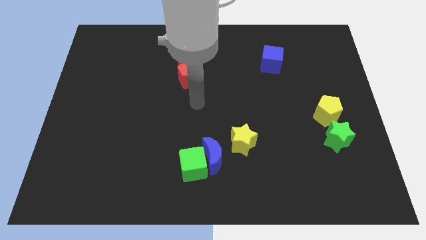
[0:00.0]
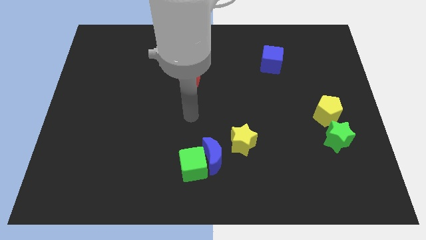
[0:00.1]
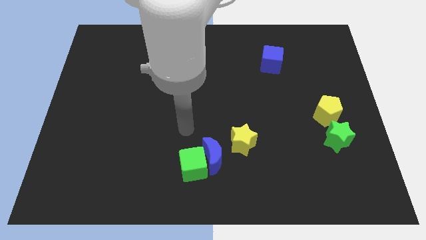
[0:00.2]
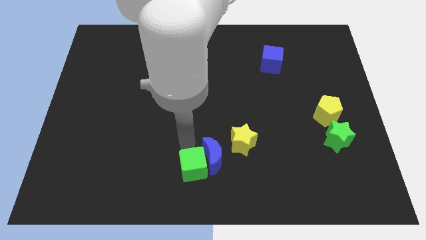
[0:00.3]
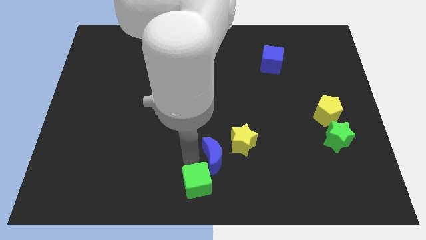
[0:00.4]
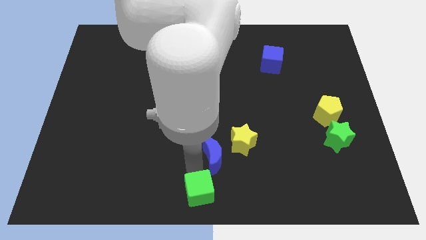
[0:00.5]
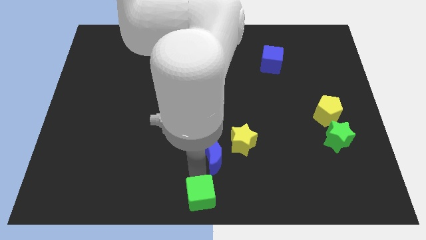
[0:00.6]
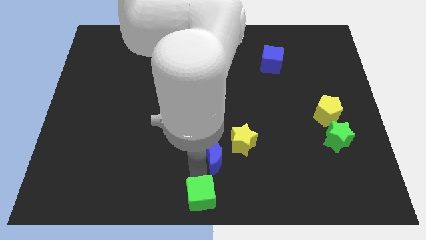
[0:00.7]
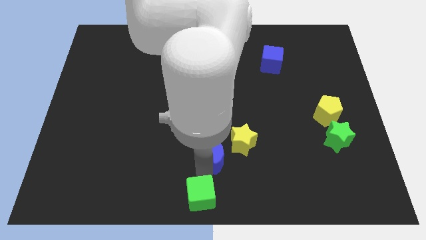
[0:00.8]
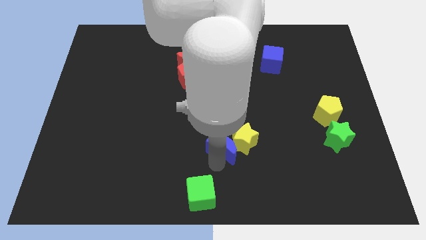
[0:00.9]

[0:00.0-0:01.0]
push the green cube downward

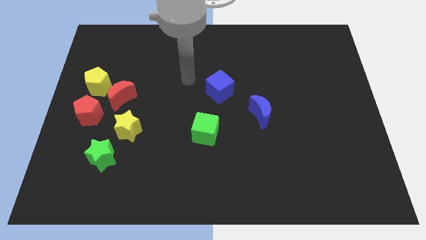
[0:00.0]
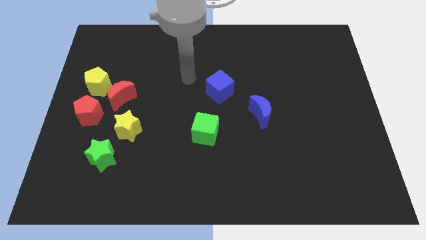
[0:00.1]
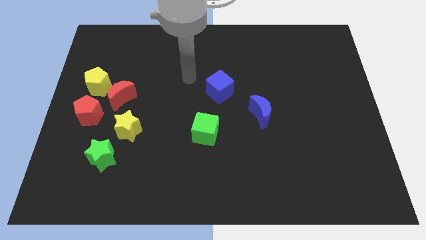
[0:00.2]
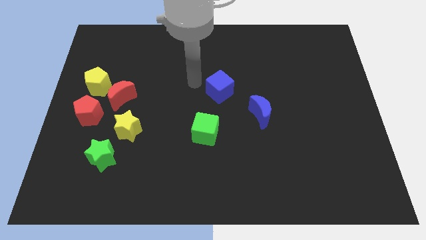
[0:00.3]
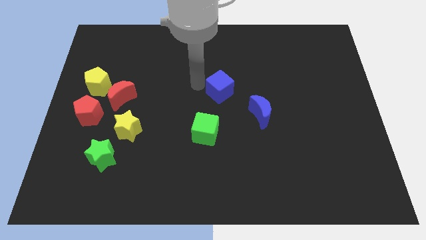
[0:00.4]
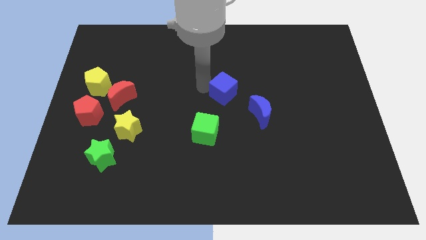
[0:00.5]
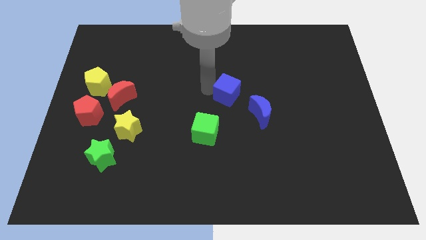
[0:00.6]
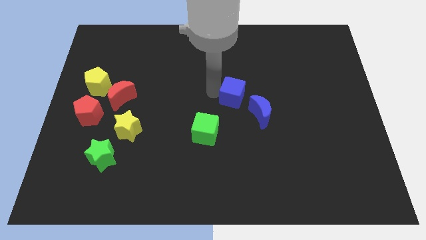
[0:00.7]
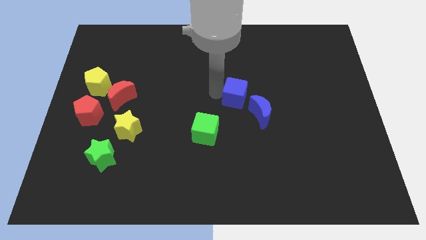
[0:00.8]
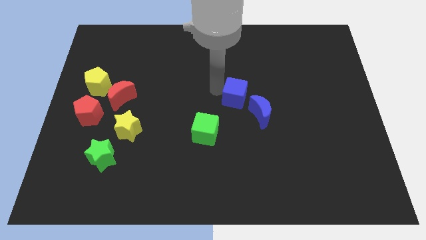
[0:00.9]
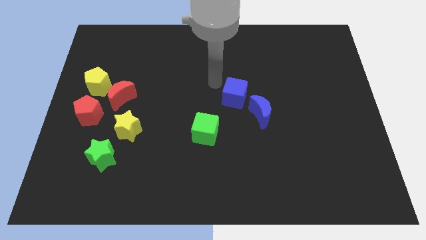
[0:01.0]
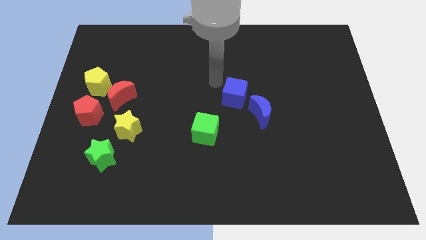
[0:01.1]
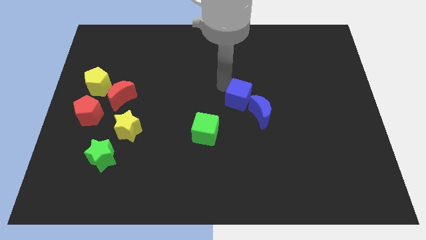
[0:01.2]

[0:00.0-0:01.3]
push the blue cube to the left of the blue crescent

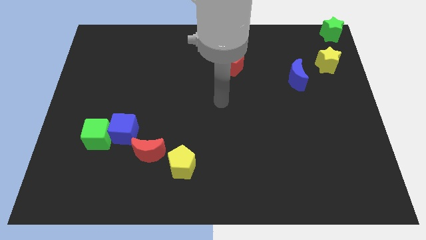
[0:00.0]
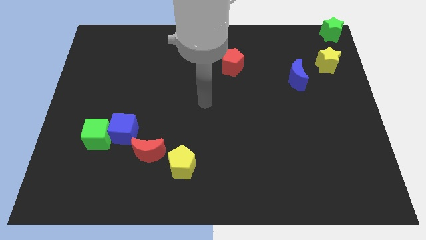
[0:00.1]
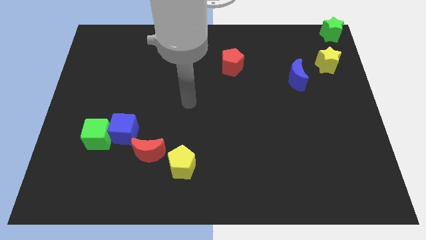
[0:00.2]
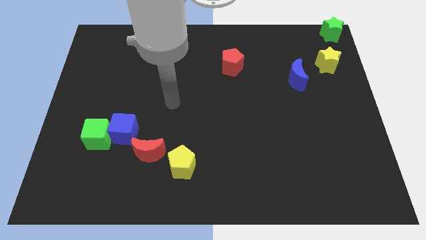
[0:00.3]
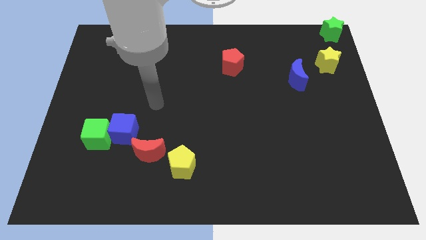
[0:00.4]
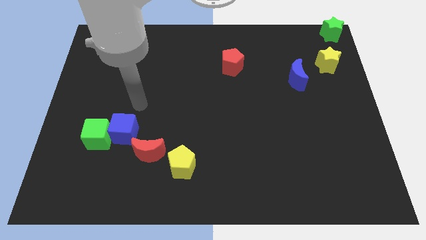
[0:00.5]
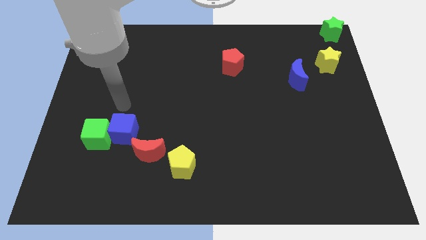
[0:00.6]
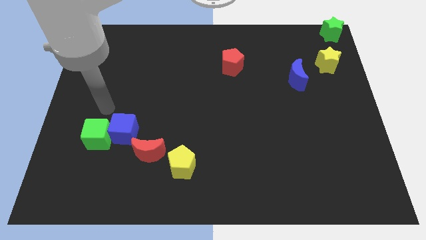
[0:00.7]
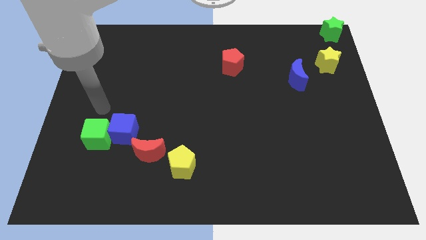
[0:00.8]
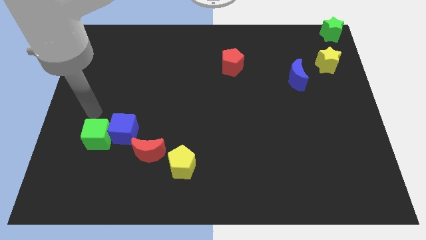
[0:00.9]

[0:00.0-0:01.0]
point your arm at the top of green cube

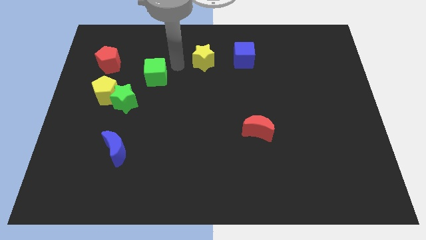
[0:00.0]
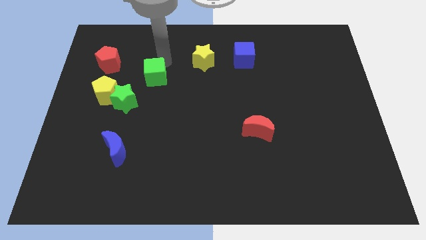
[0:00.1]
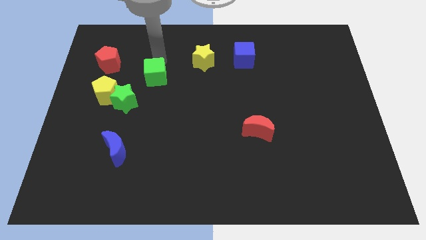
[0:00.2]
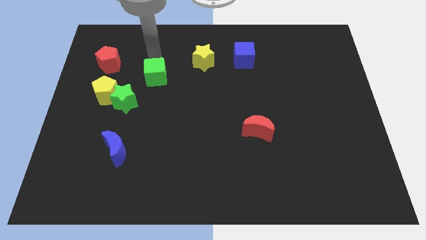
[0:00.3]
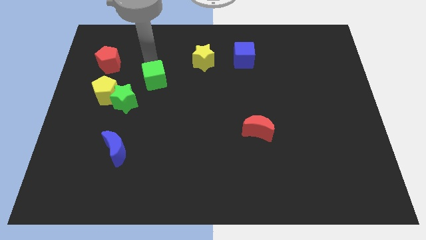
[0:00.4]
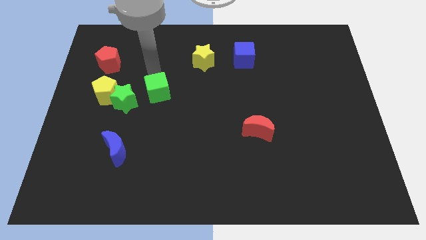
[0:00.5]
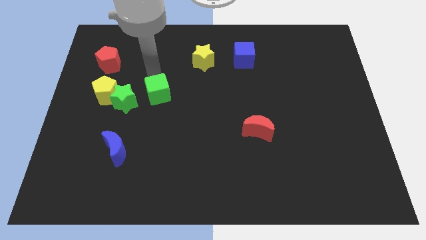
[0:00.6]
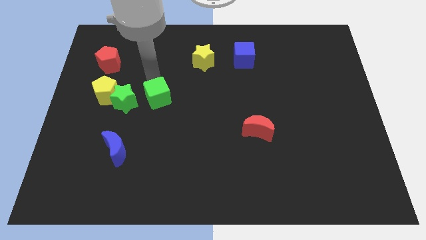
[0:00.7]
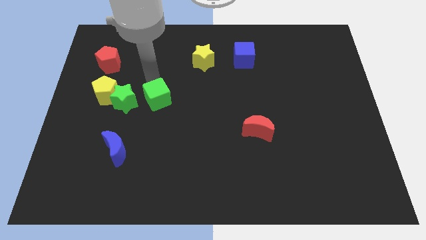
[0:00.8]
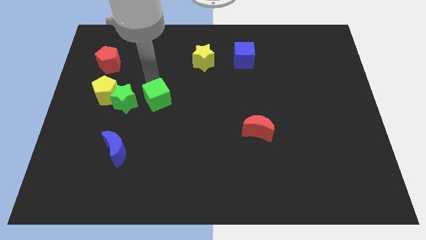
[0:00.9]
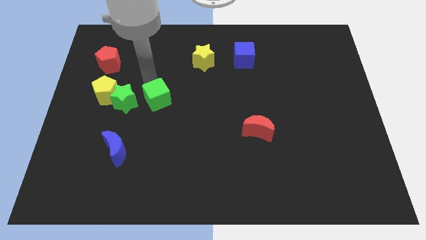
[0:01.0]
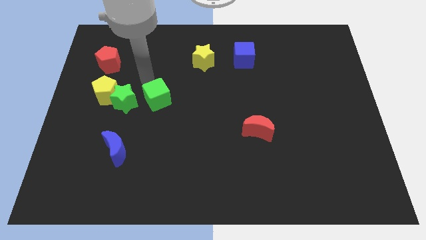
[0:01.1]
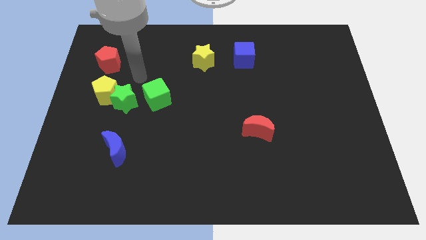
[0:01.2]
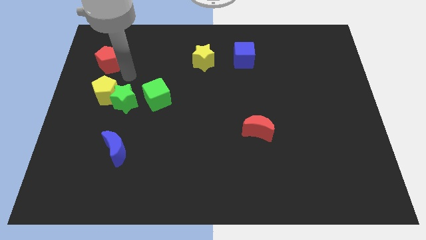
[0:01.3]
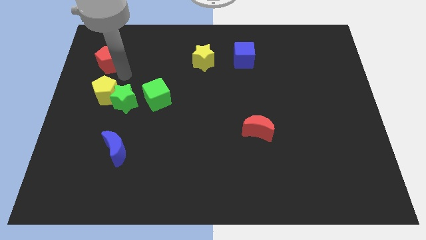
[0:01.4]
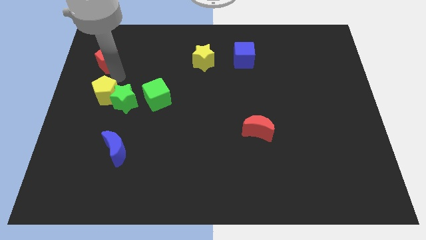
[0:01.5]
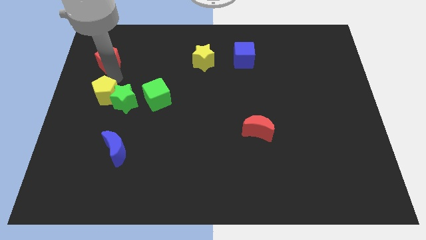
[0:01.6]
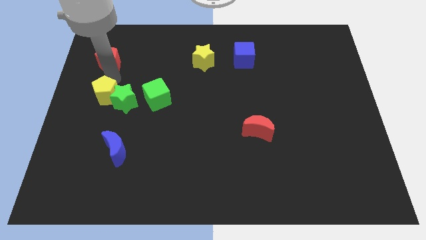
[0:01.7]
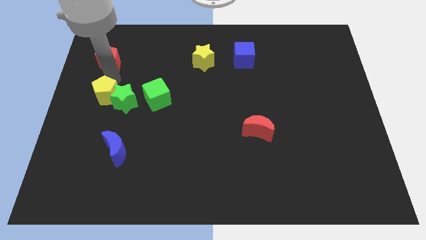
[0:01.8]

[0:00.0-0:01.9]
push green cube down

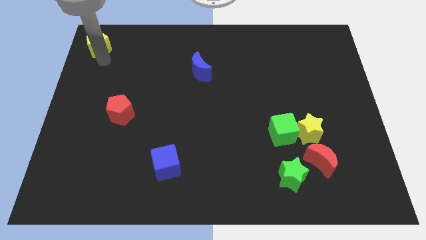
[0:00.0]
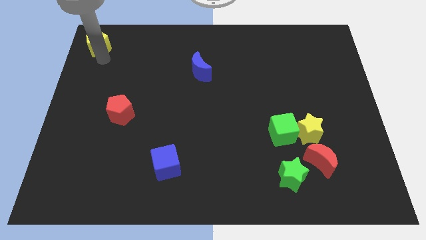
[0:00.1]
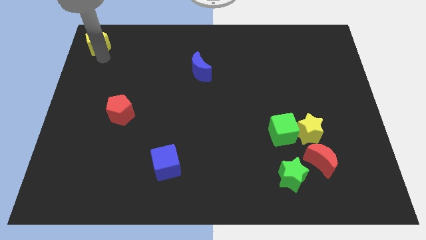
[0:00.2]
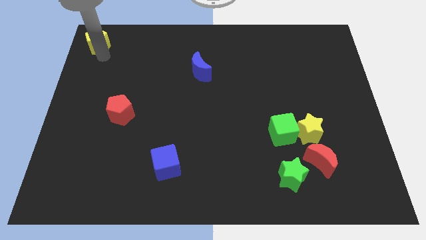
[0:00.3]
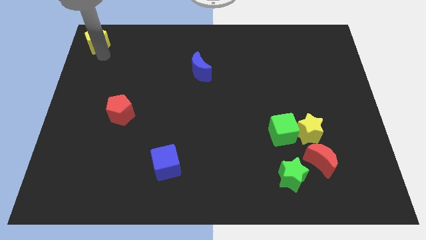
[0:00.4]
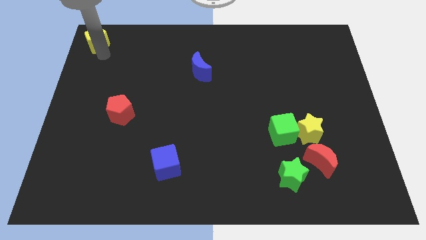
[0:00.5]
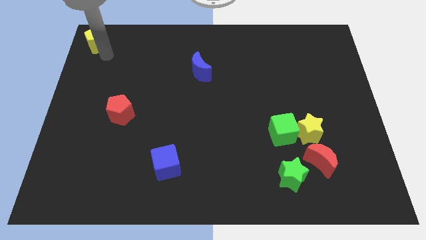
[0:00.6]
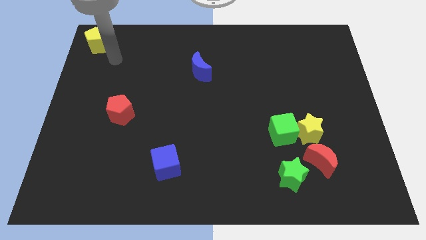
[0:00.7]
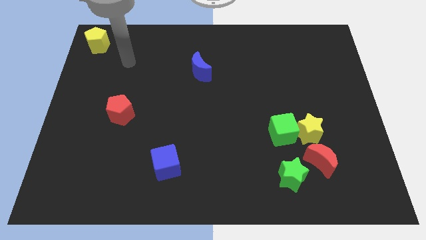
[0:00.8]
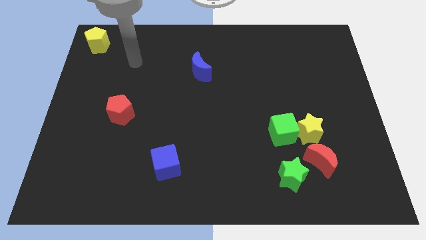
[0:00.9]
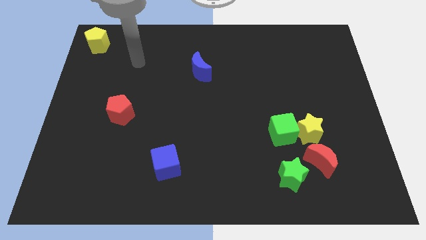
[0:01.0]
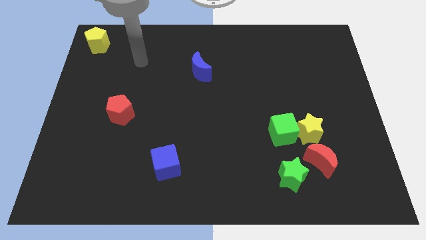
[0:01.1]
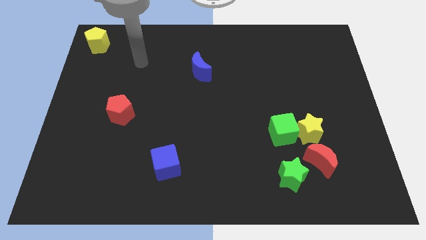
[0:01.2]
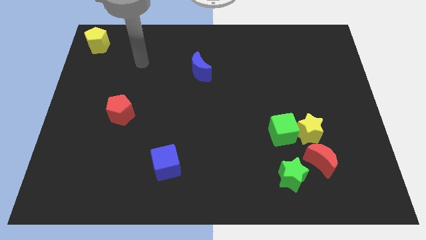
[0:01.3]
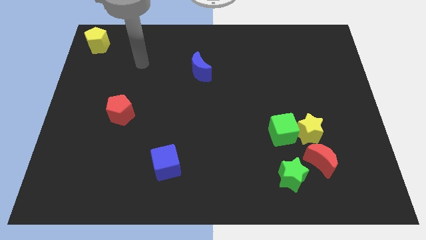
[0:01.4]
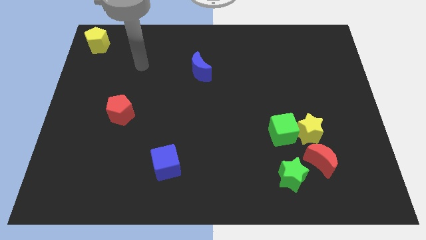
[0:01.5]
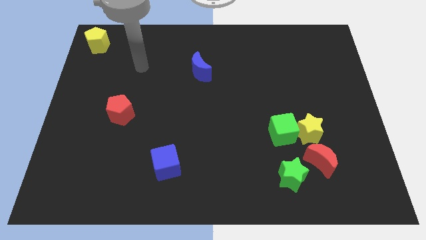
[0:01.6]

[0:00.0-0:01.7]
move the yellow pentagon to the top left corner of the board

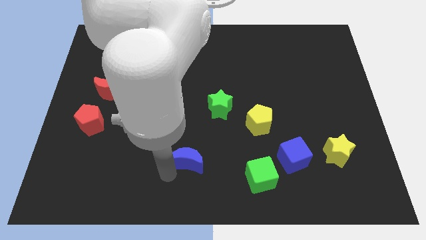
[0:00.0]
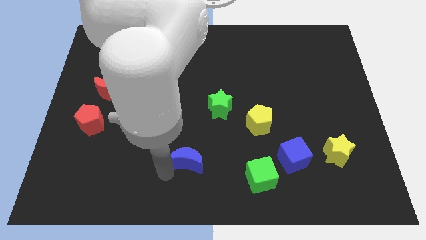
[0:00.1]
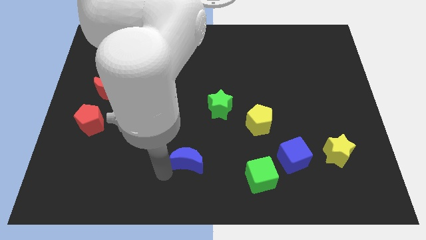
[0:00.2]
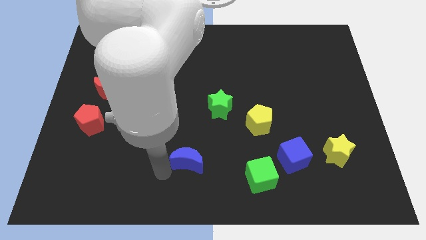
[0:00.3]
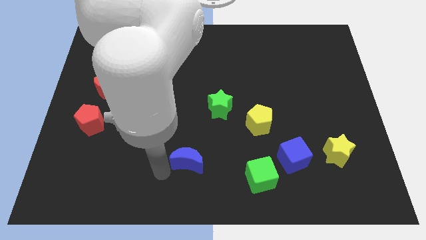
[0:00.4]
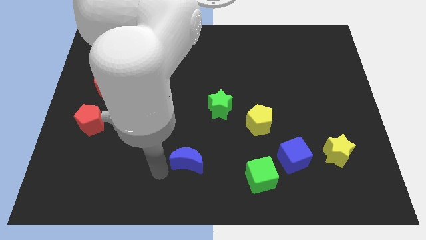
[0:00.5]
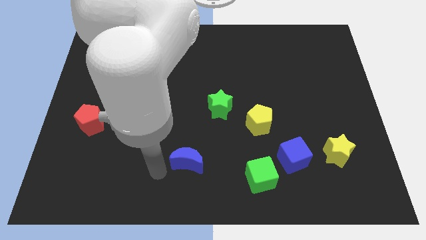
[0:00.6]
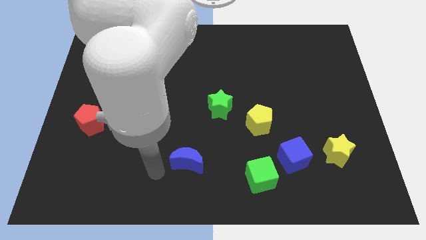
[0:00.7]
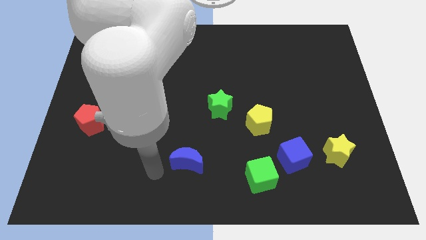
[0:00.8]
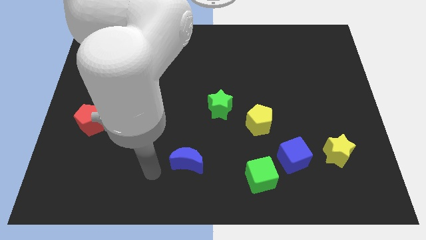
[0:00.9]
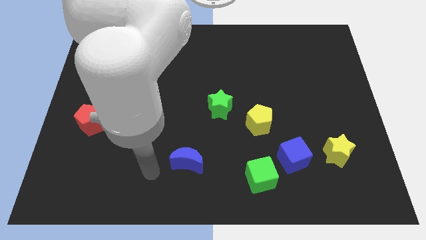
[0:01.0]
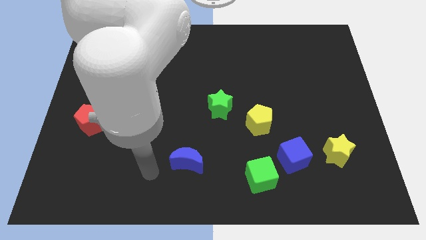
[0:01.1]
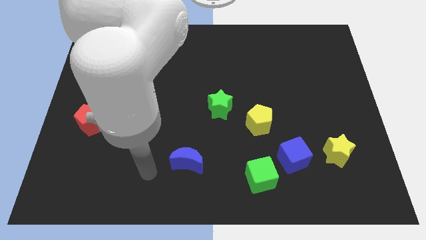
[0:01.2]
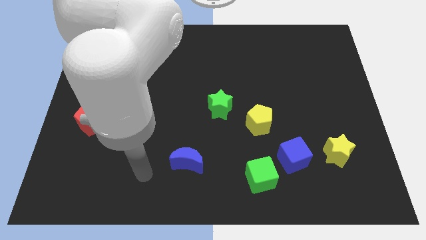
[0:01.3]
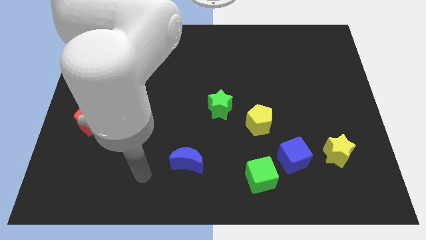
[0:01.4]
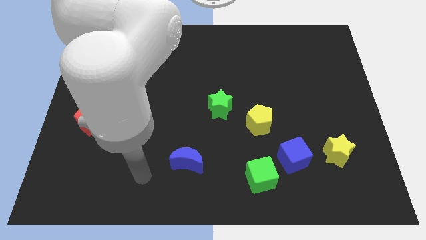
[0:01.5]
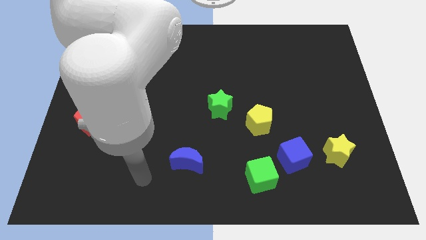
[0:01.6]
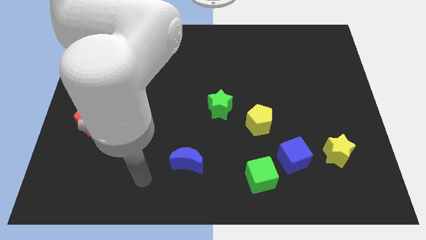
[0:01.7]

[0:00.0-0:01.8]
move the arm away from blue crescent

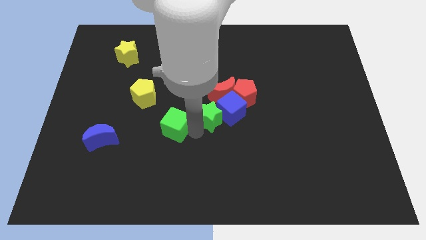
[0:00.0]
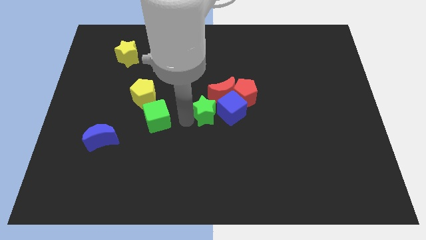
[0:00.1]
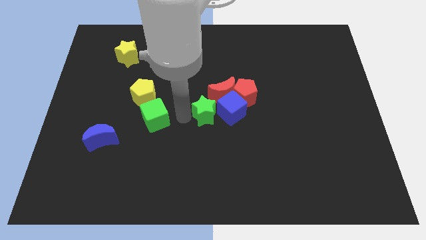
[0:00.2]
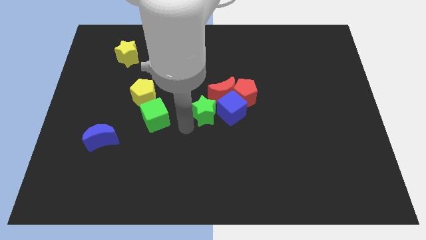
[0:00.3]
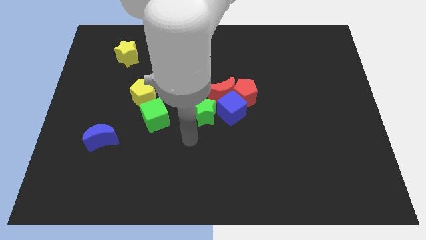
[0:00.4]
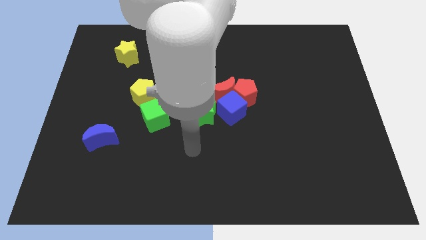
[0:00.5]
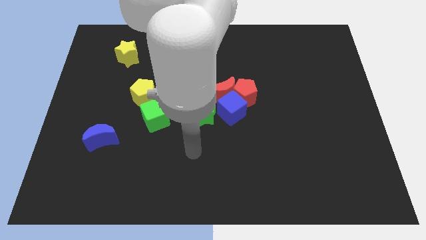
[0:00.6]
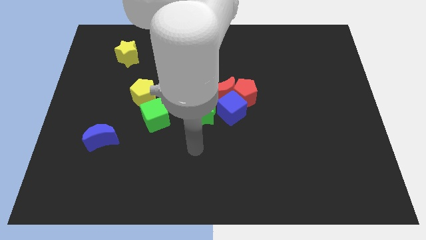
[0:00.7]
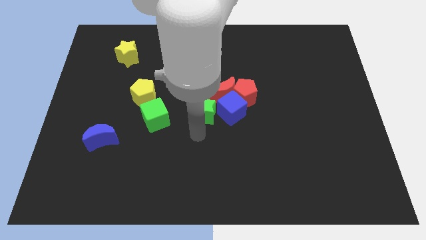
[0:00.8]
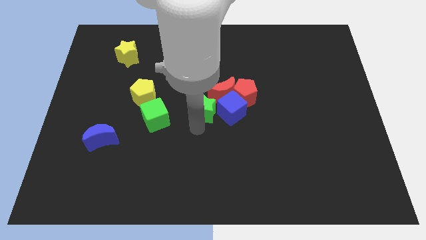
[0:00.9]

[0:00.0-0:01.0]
move the arm to the bottom of the green star
